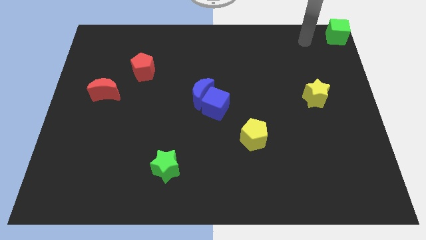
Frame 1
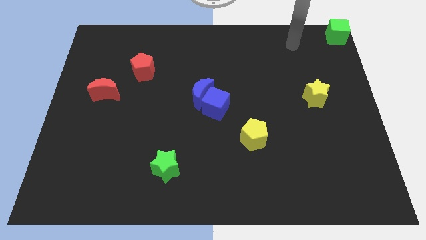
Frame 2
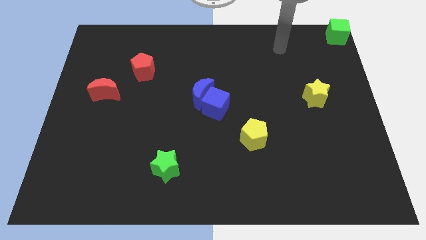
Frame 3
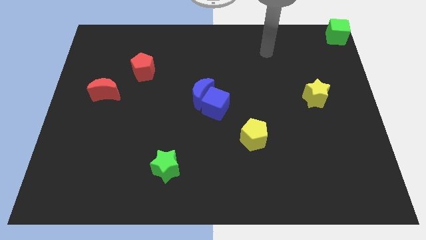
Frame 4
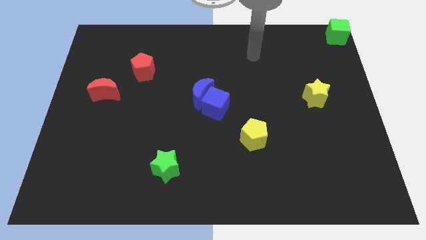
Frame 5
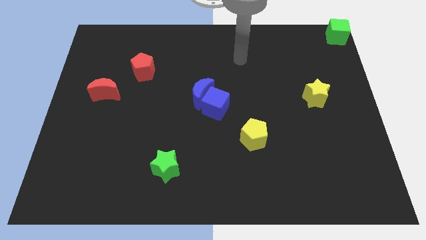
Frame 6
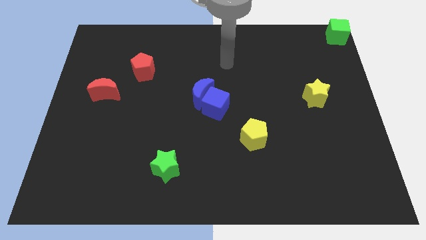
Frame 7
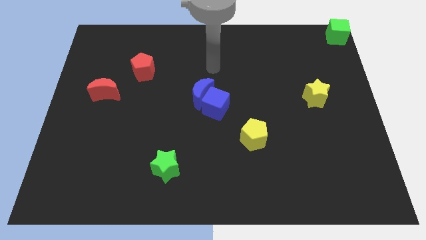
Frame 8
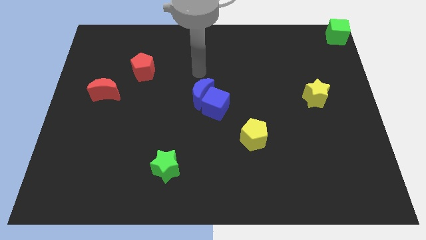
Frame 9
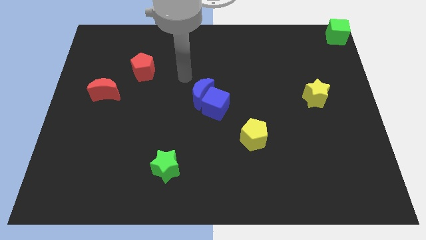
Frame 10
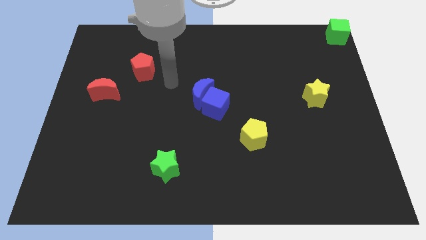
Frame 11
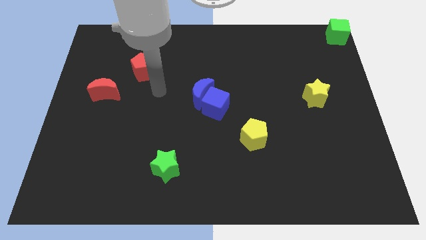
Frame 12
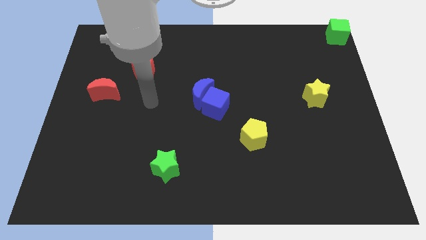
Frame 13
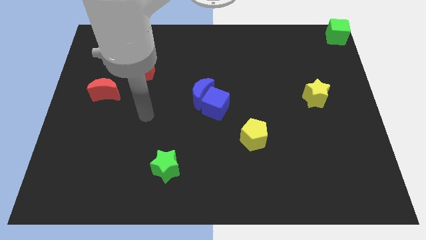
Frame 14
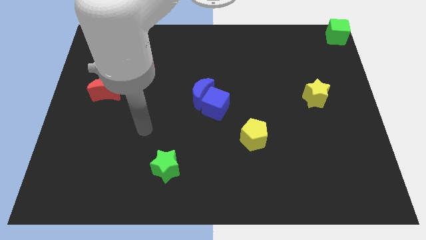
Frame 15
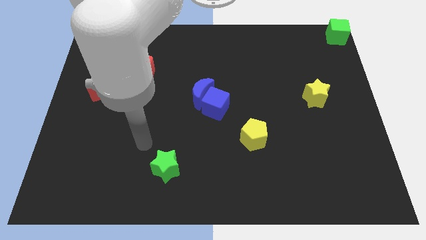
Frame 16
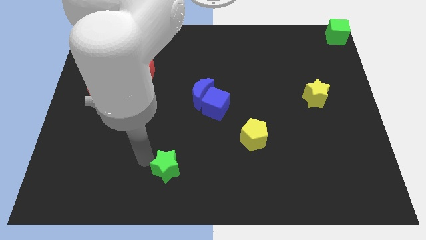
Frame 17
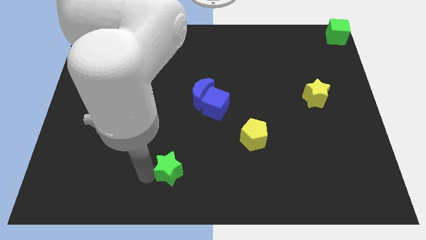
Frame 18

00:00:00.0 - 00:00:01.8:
place the arm to the left of the green star

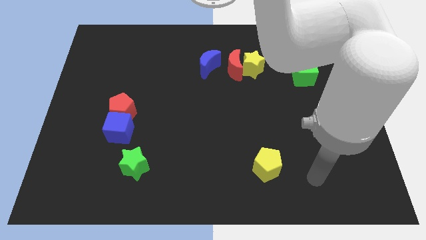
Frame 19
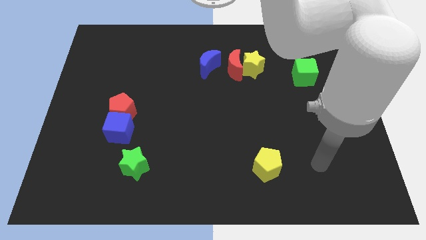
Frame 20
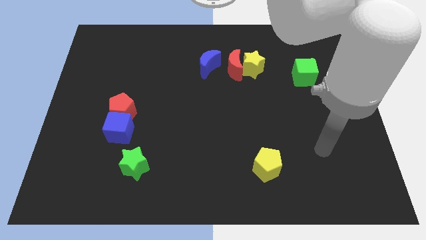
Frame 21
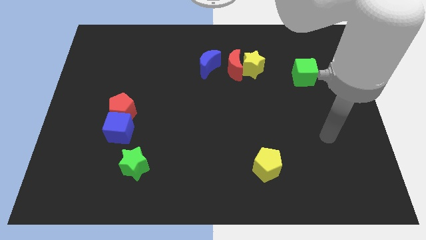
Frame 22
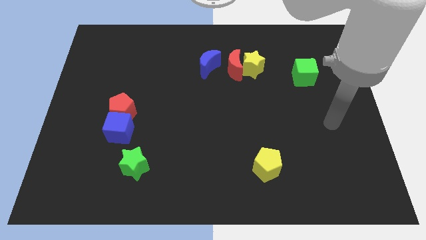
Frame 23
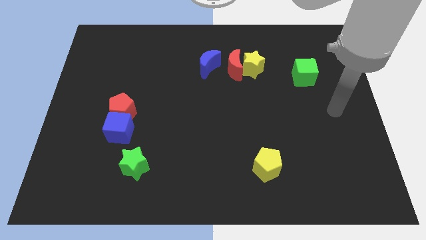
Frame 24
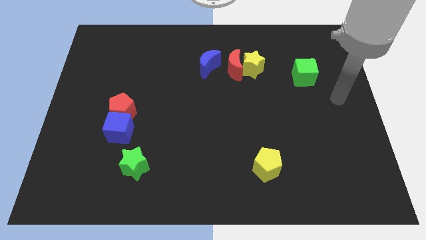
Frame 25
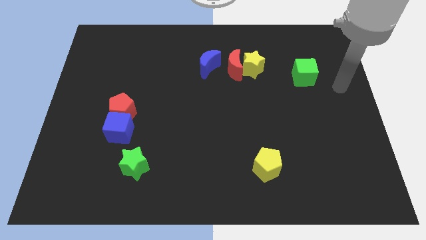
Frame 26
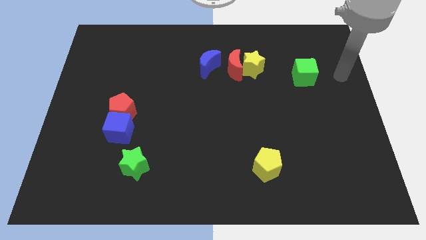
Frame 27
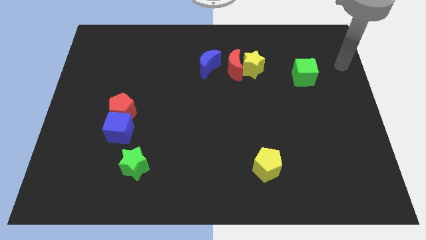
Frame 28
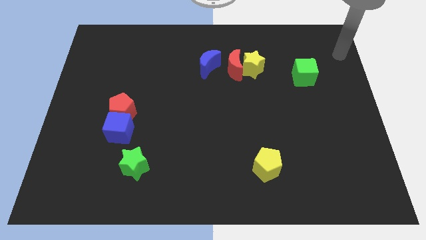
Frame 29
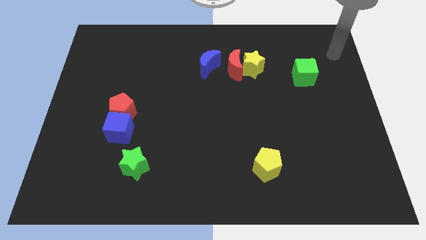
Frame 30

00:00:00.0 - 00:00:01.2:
go and point your hand at the top right corner of the board

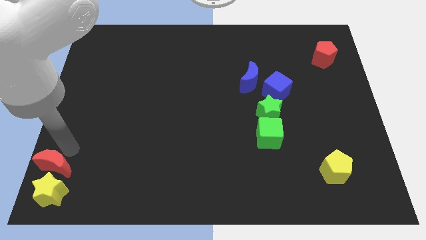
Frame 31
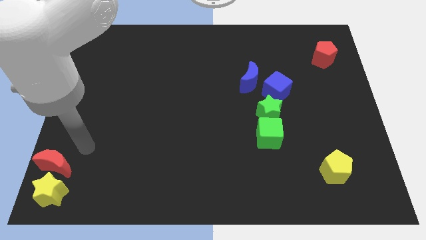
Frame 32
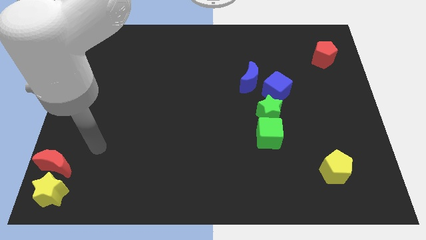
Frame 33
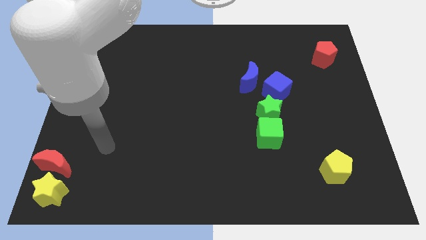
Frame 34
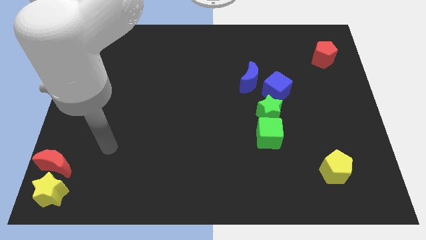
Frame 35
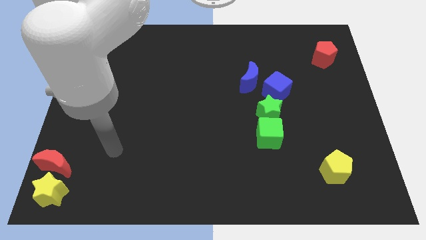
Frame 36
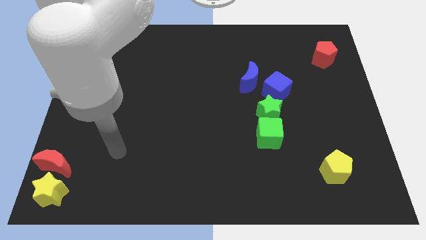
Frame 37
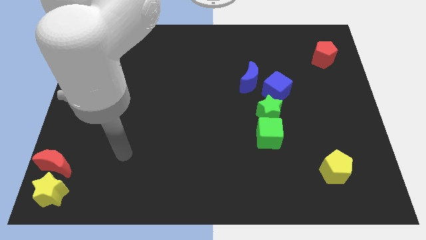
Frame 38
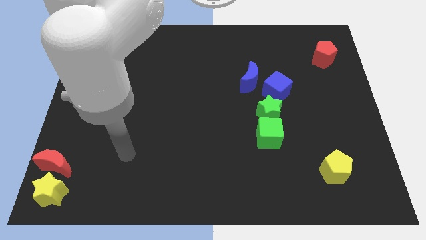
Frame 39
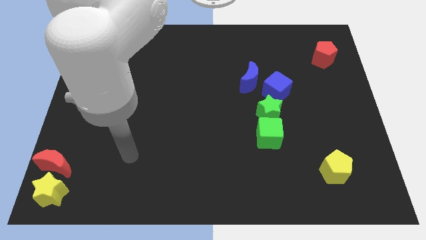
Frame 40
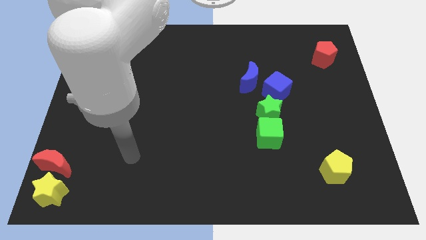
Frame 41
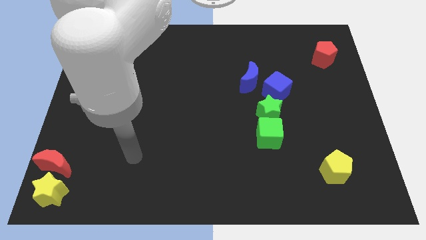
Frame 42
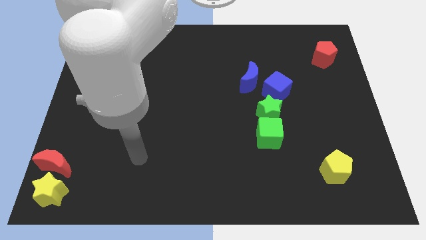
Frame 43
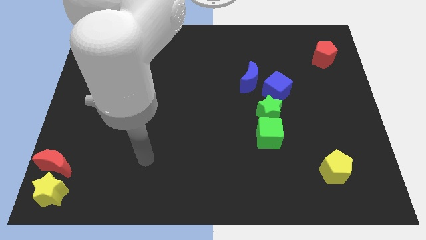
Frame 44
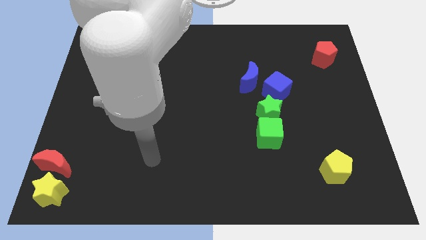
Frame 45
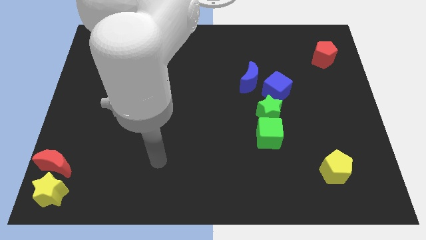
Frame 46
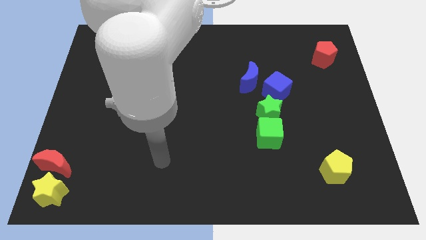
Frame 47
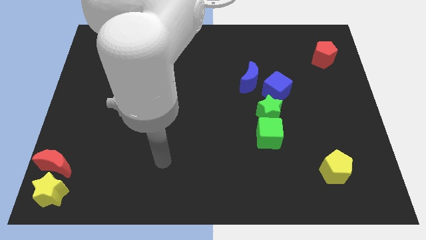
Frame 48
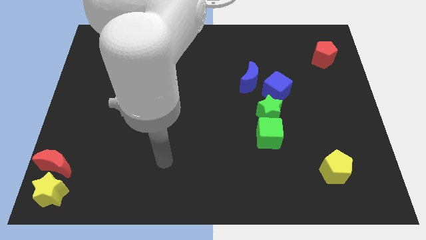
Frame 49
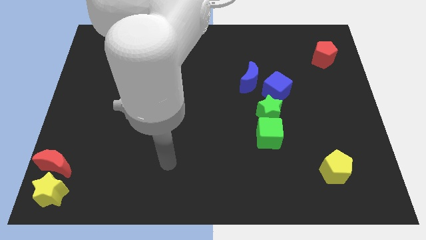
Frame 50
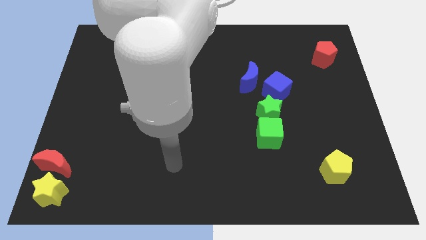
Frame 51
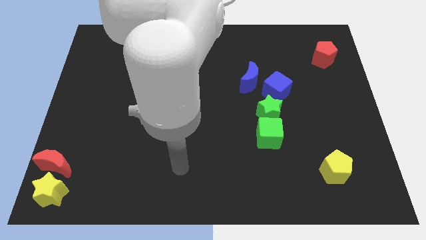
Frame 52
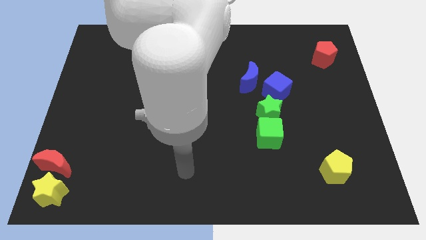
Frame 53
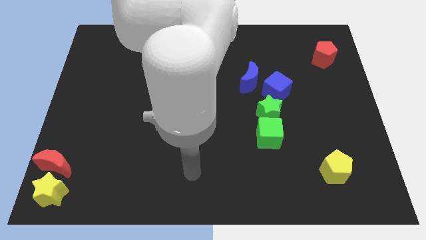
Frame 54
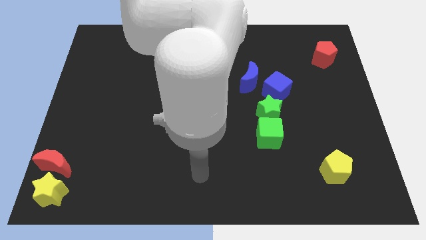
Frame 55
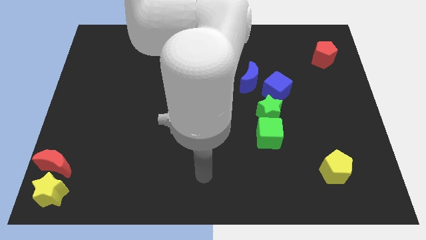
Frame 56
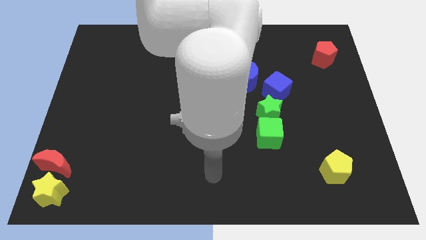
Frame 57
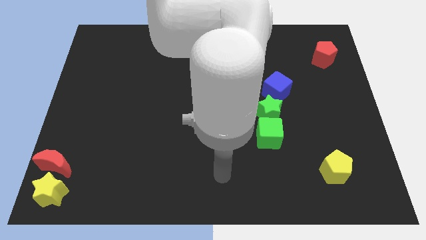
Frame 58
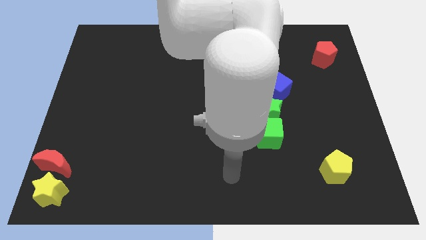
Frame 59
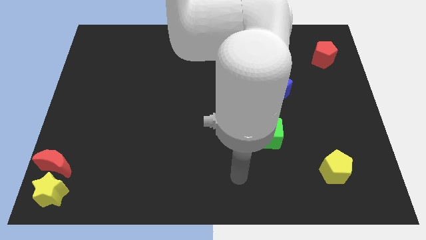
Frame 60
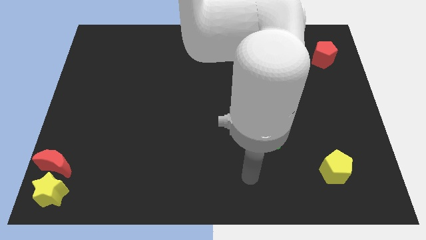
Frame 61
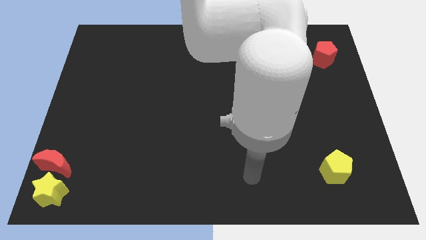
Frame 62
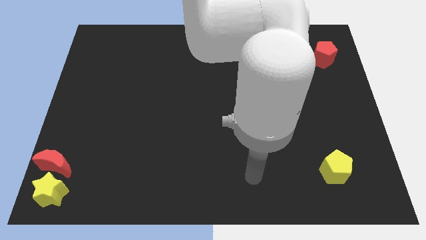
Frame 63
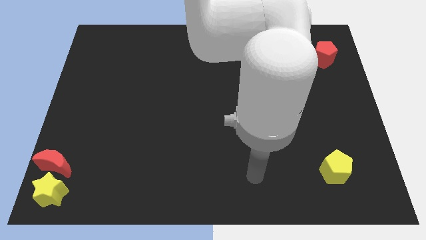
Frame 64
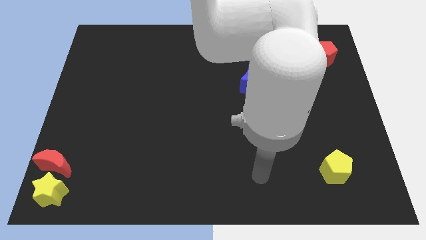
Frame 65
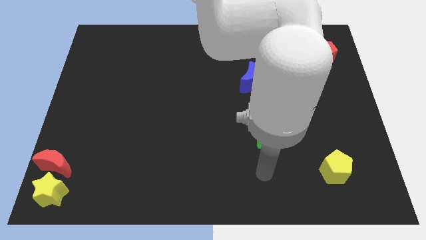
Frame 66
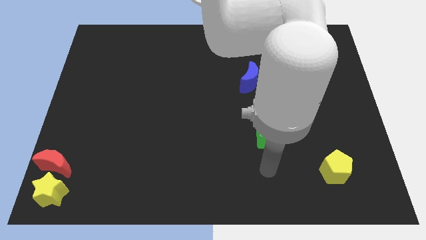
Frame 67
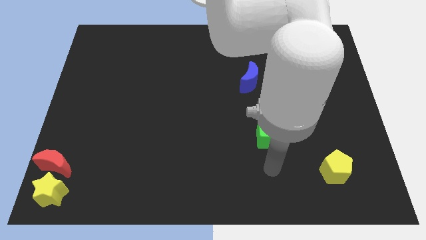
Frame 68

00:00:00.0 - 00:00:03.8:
place your arm to the bottom of green cube

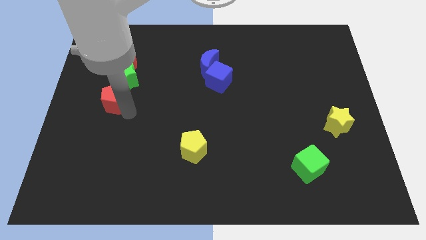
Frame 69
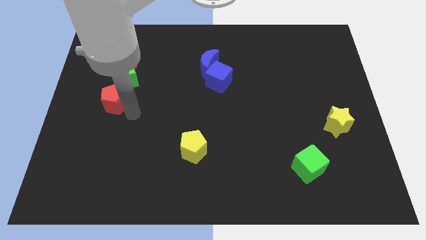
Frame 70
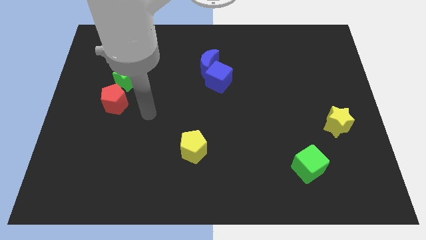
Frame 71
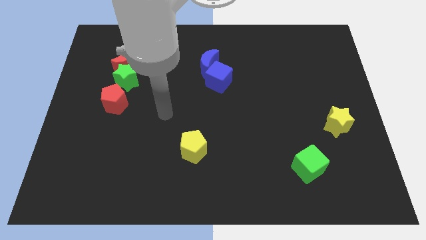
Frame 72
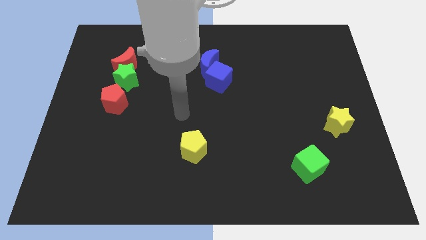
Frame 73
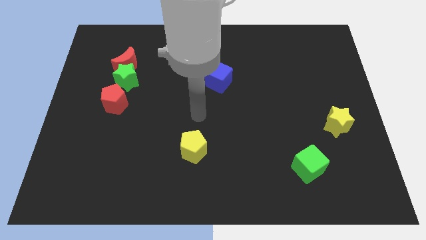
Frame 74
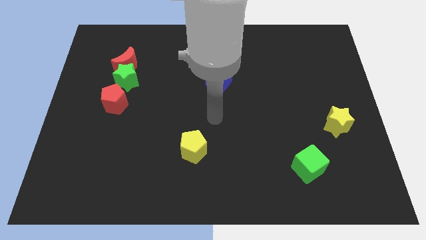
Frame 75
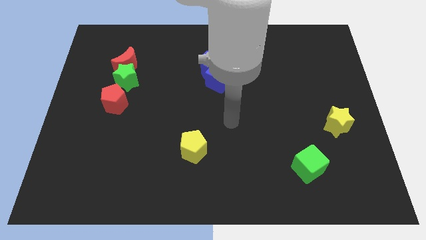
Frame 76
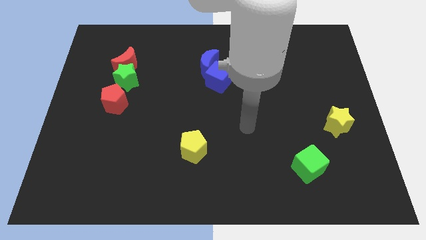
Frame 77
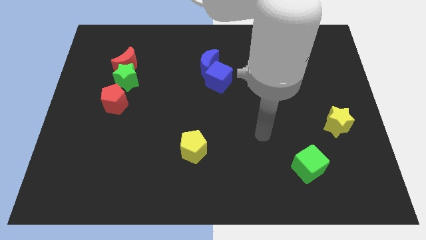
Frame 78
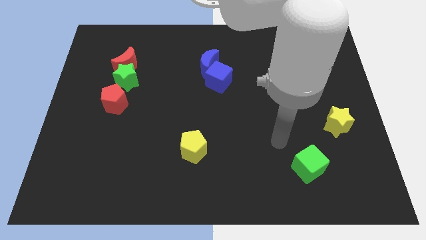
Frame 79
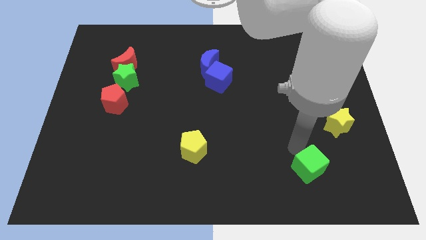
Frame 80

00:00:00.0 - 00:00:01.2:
point your arm at the top left side of green cube

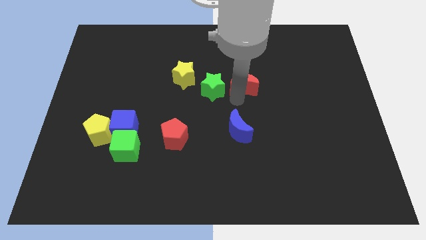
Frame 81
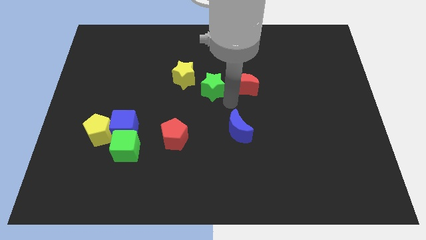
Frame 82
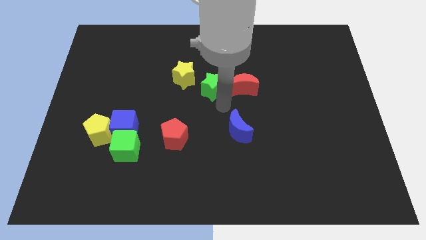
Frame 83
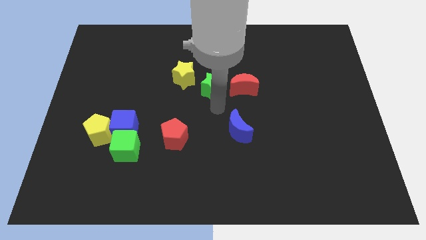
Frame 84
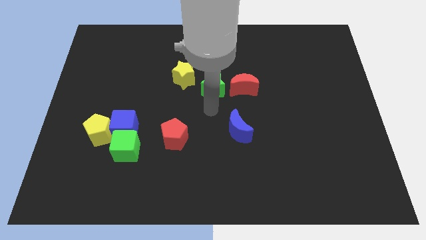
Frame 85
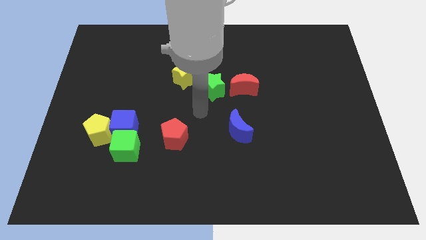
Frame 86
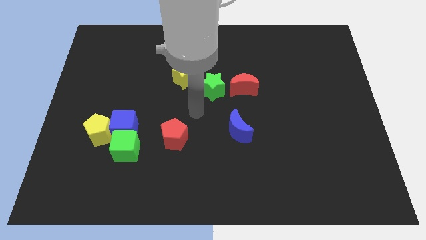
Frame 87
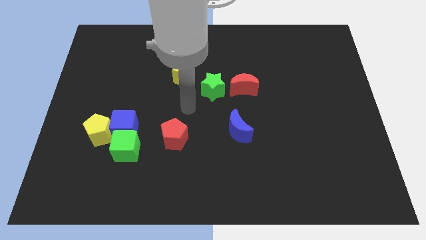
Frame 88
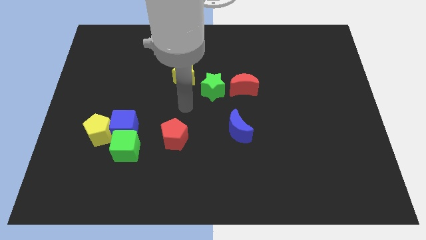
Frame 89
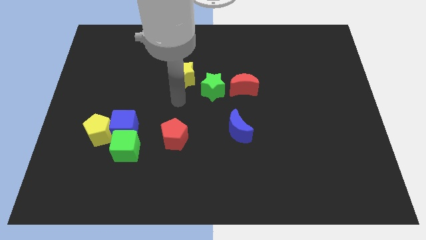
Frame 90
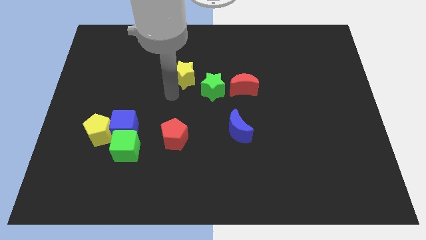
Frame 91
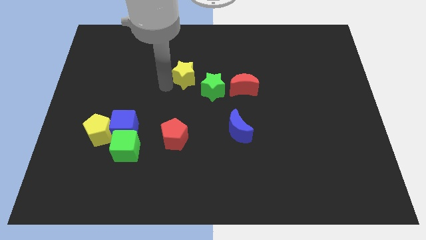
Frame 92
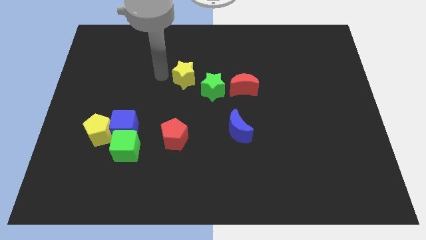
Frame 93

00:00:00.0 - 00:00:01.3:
point your arm at the left side of the yellow star
